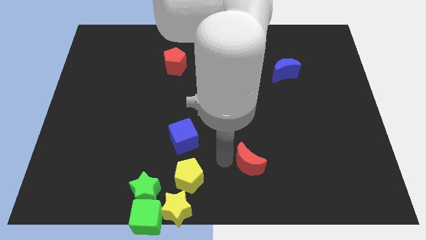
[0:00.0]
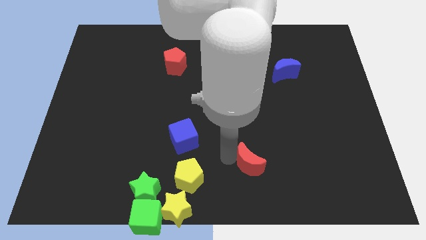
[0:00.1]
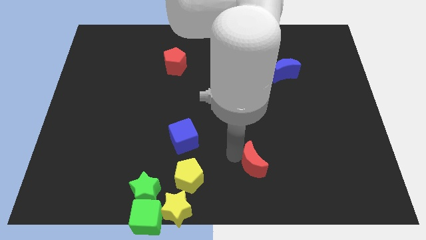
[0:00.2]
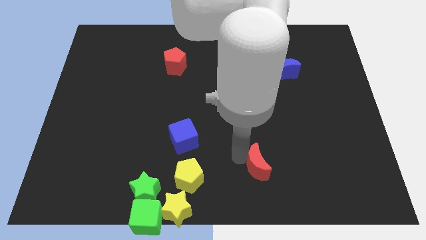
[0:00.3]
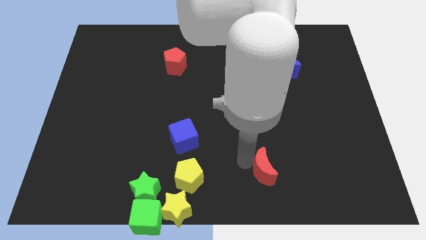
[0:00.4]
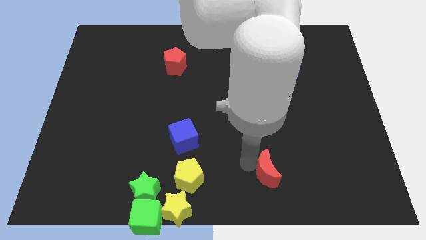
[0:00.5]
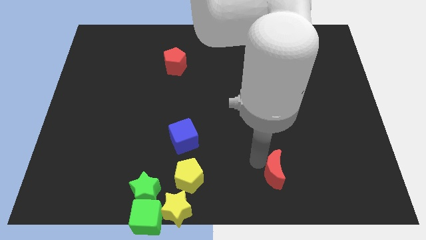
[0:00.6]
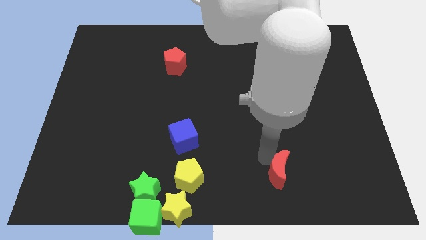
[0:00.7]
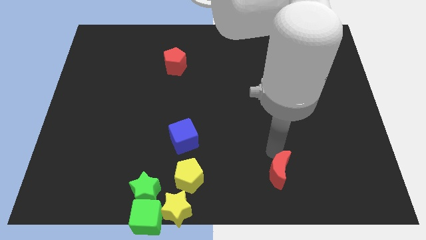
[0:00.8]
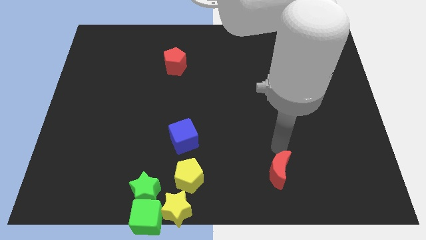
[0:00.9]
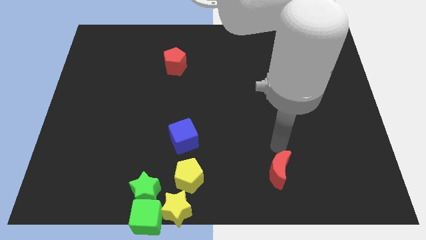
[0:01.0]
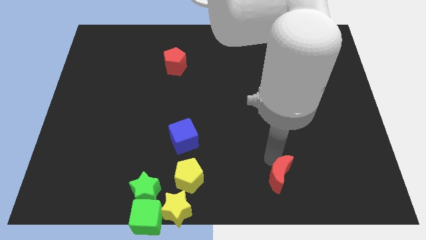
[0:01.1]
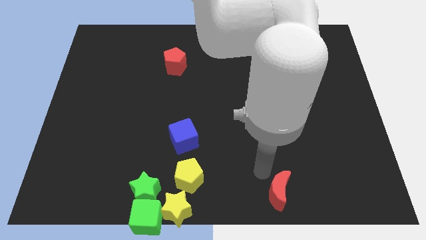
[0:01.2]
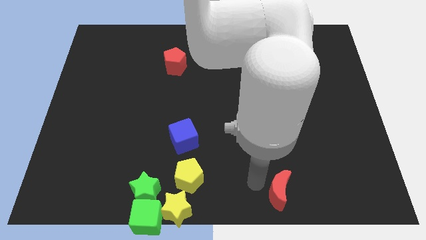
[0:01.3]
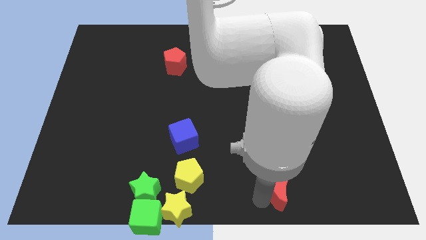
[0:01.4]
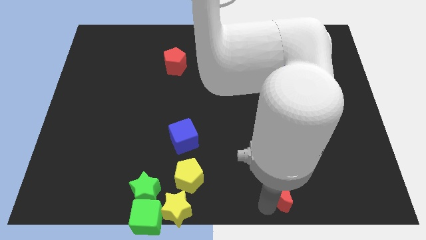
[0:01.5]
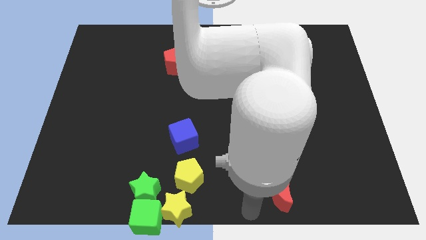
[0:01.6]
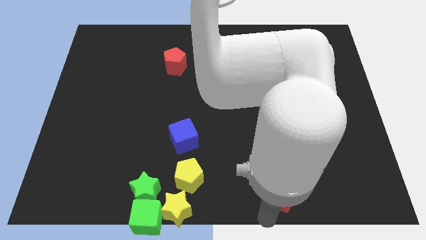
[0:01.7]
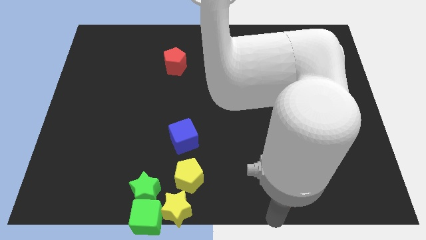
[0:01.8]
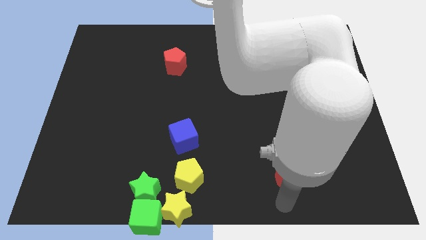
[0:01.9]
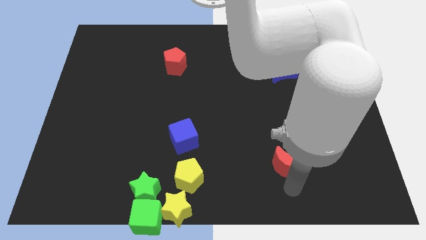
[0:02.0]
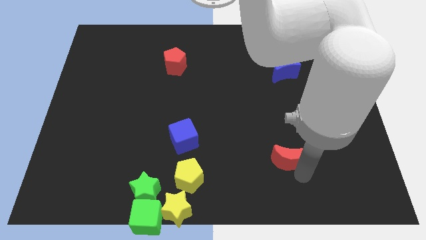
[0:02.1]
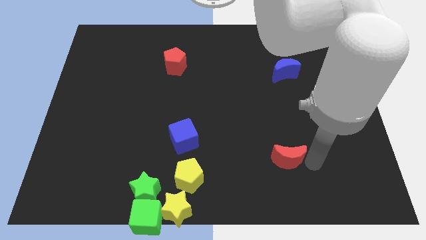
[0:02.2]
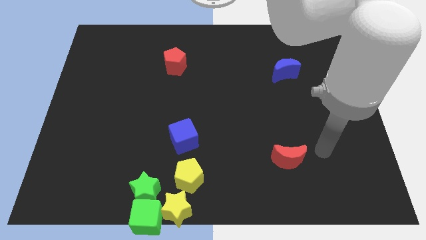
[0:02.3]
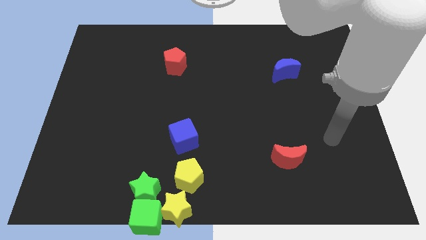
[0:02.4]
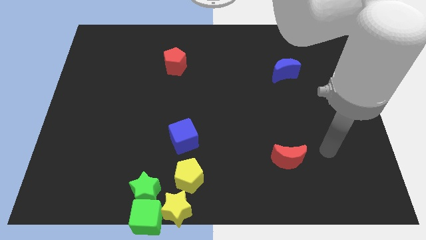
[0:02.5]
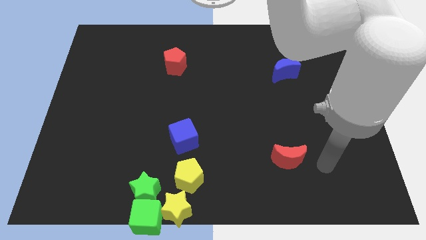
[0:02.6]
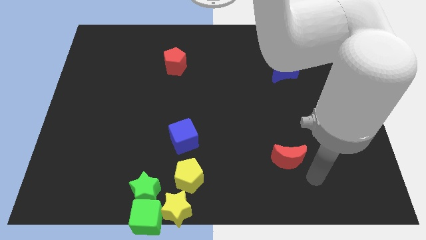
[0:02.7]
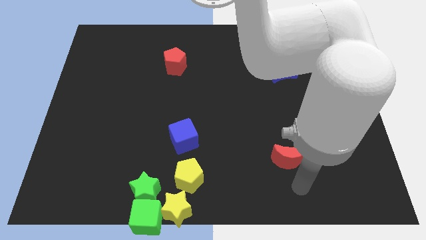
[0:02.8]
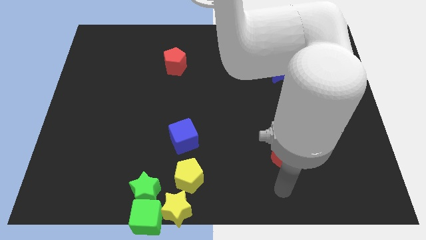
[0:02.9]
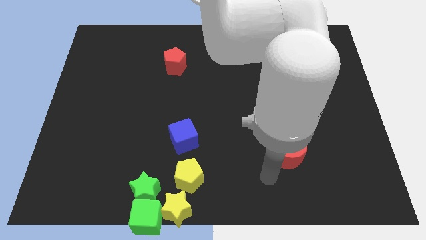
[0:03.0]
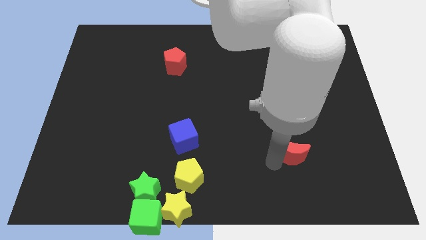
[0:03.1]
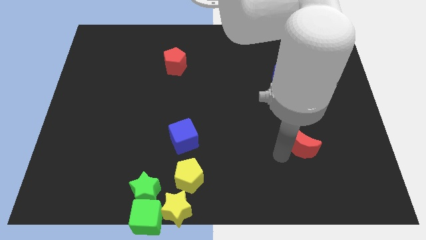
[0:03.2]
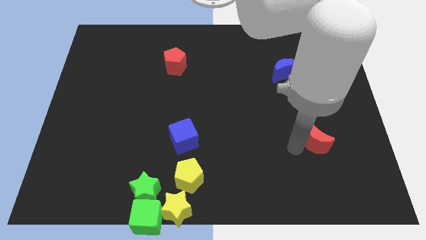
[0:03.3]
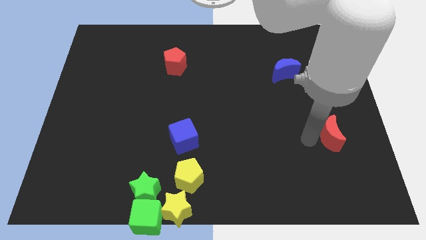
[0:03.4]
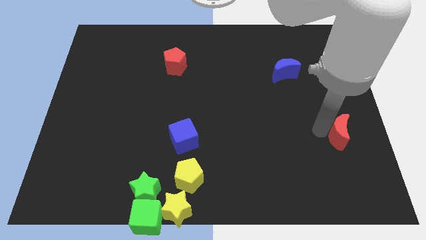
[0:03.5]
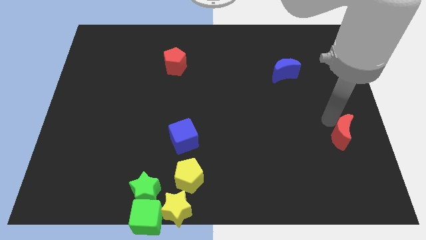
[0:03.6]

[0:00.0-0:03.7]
move the red crescent to the centre right of the board

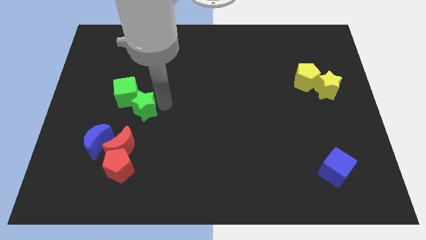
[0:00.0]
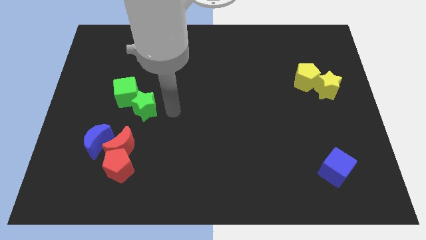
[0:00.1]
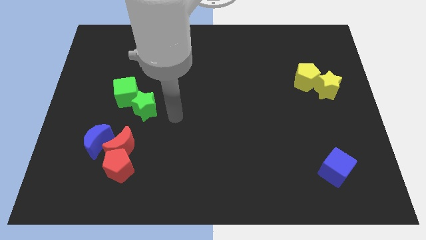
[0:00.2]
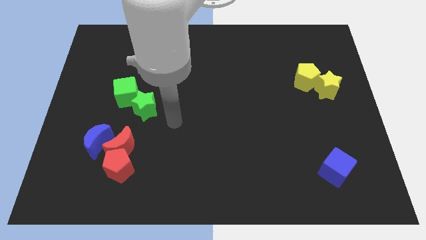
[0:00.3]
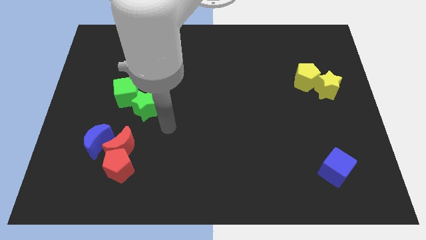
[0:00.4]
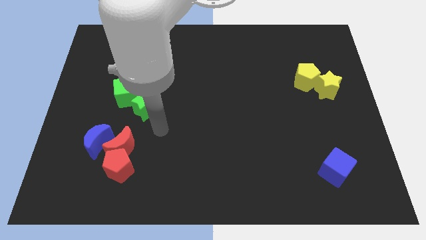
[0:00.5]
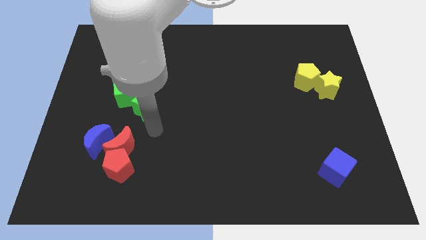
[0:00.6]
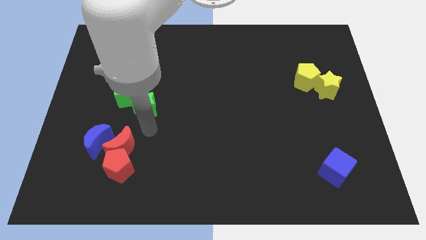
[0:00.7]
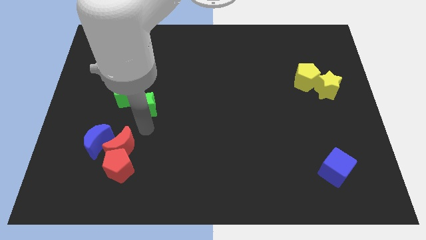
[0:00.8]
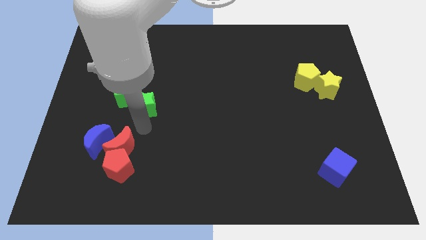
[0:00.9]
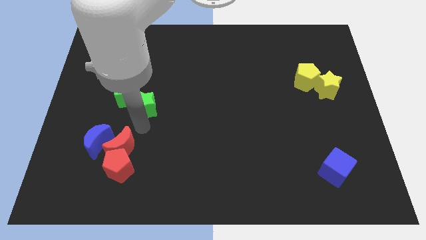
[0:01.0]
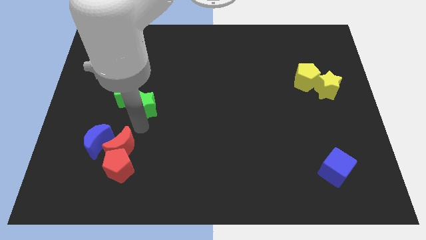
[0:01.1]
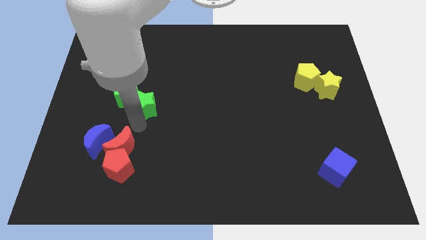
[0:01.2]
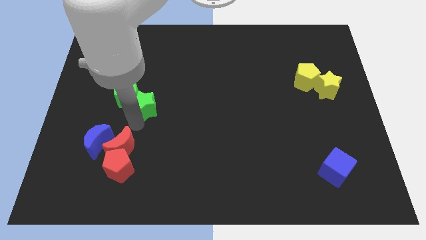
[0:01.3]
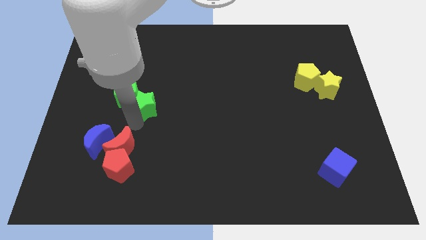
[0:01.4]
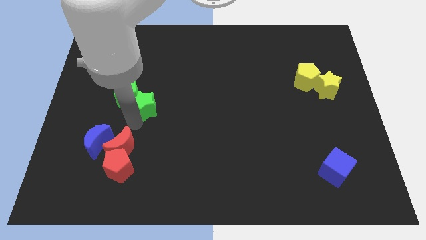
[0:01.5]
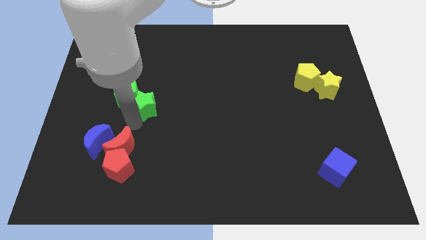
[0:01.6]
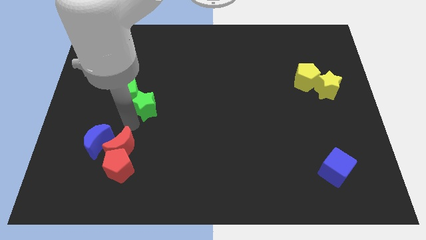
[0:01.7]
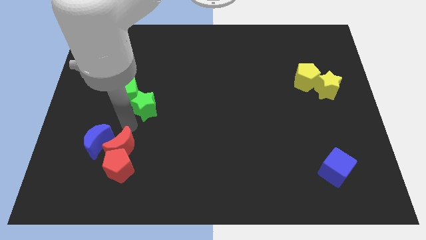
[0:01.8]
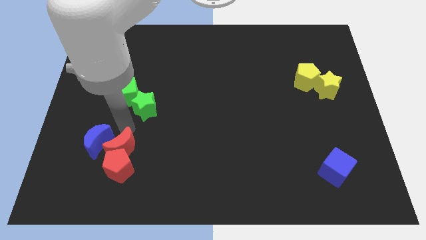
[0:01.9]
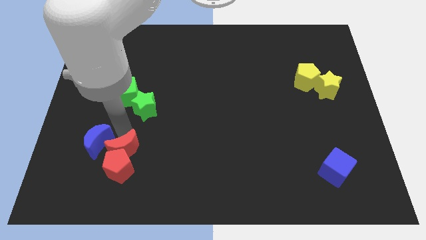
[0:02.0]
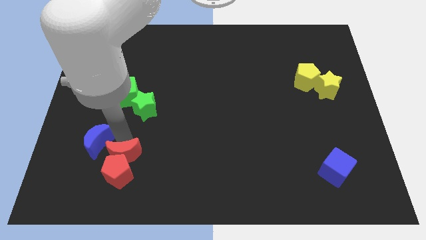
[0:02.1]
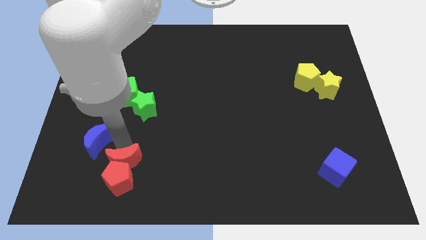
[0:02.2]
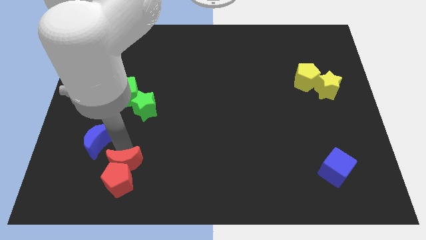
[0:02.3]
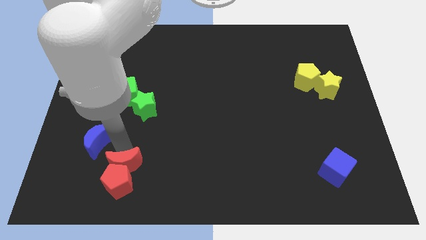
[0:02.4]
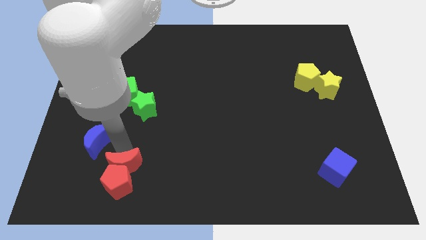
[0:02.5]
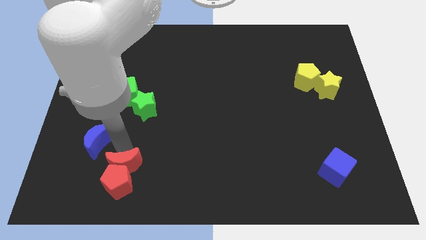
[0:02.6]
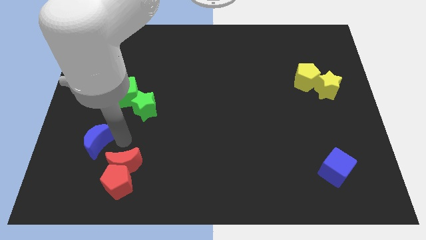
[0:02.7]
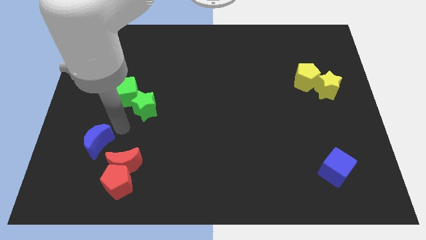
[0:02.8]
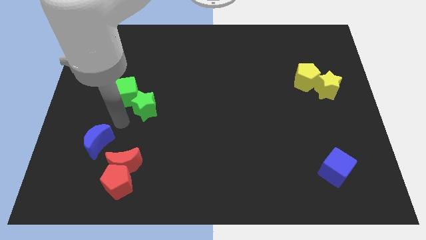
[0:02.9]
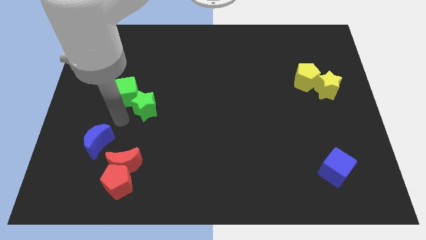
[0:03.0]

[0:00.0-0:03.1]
slide the group of red blocks away from the blue crescent

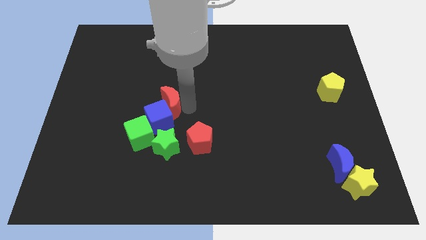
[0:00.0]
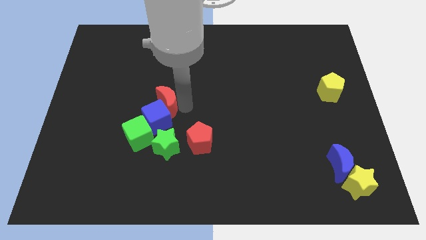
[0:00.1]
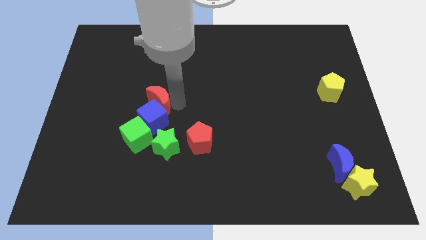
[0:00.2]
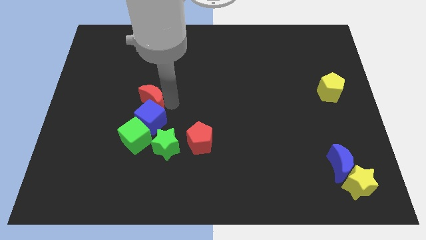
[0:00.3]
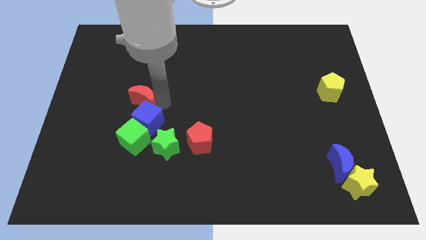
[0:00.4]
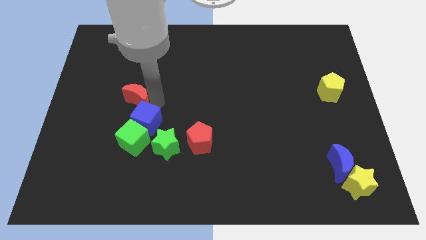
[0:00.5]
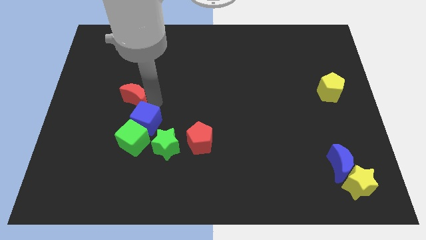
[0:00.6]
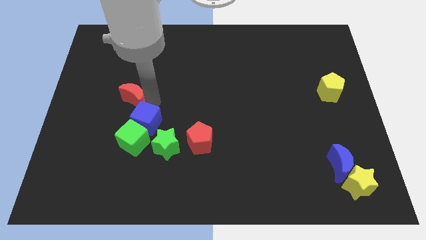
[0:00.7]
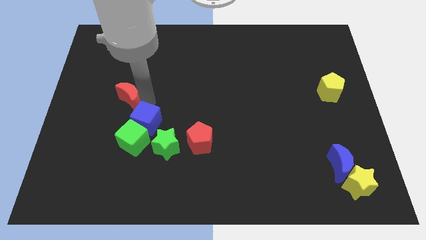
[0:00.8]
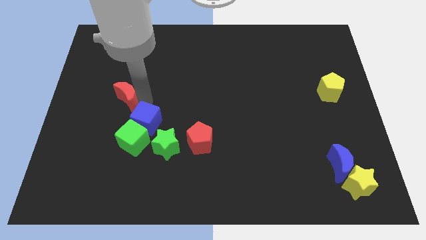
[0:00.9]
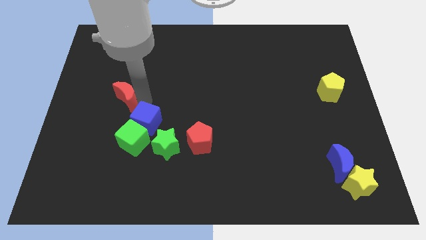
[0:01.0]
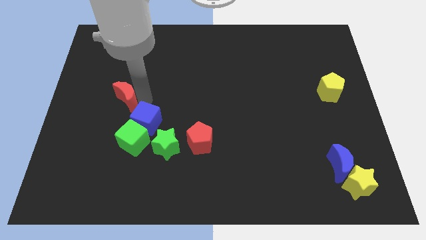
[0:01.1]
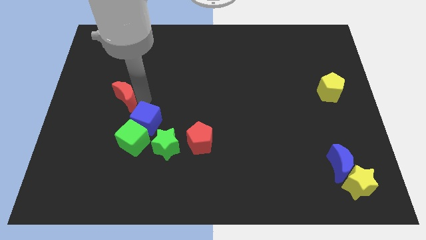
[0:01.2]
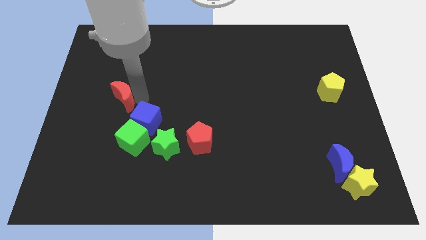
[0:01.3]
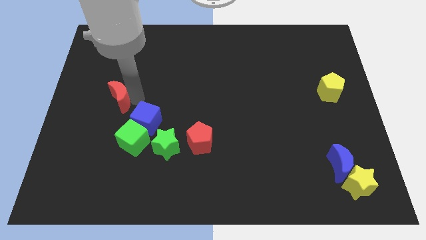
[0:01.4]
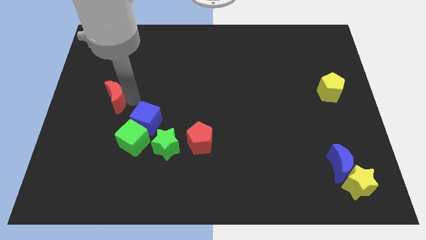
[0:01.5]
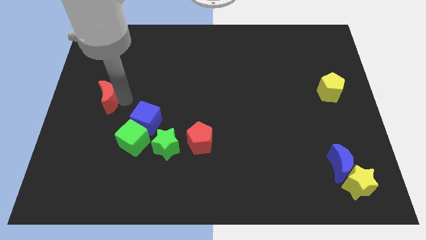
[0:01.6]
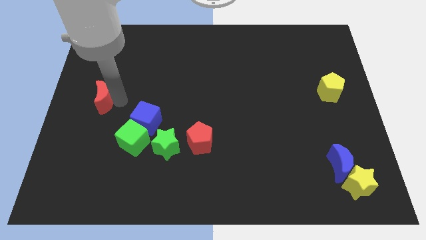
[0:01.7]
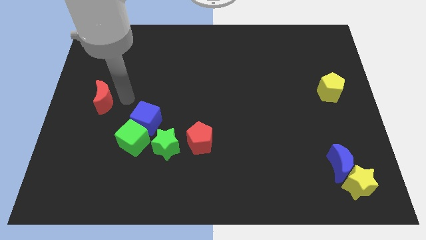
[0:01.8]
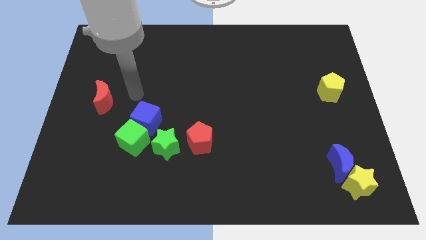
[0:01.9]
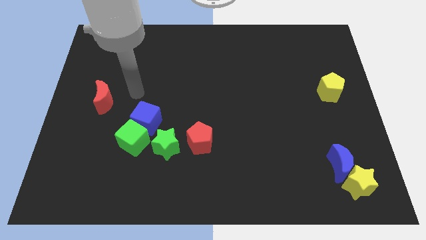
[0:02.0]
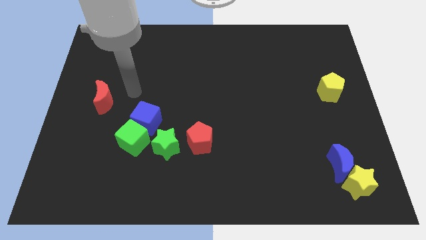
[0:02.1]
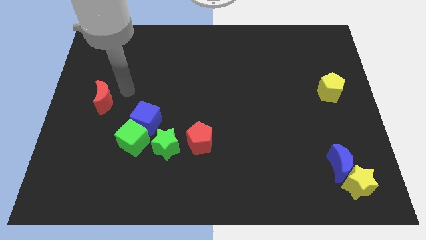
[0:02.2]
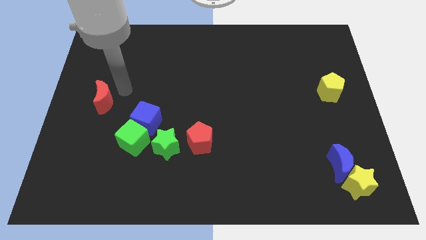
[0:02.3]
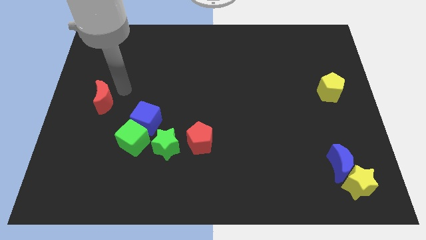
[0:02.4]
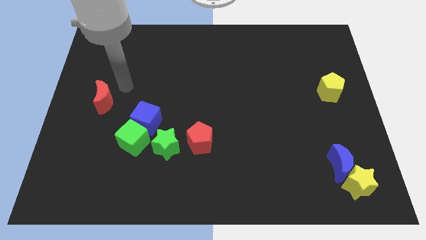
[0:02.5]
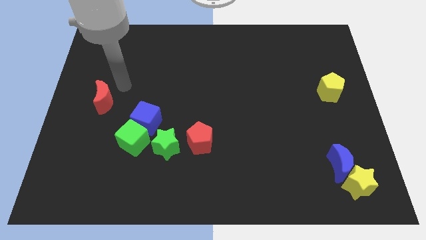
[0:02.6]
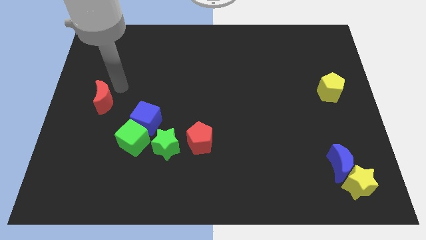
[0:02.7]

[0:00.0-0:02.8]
place the red moon at the top of the blue cube
